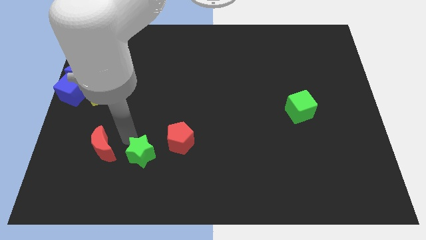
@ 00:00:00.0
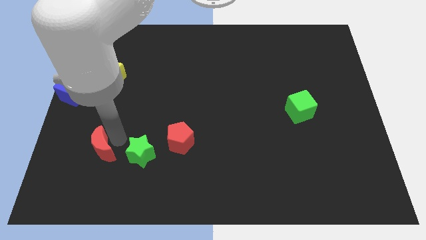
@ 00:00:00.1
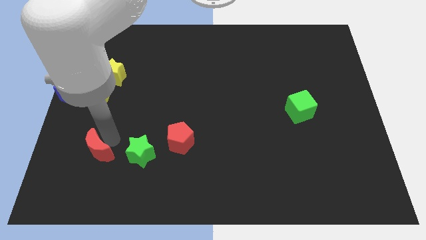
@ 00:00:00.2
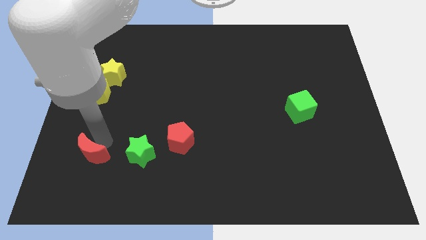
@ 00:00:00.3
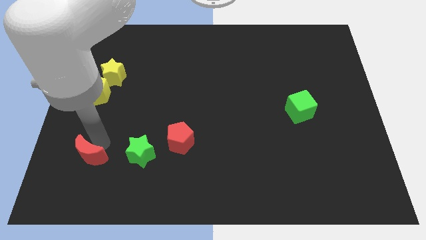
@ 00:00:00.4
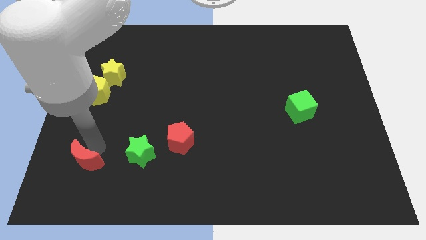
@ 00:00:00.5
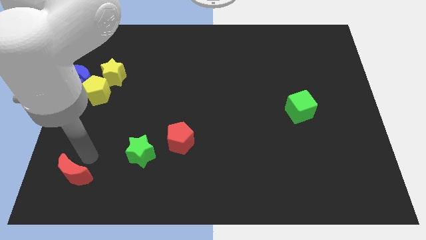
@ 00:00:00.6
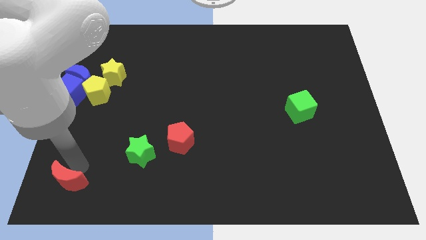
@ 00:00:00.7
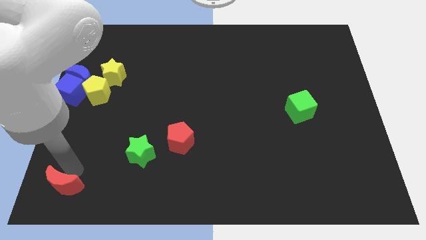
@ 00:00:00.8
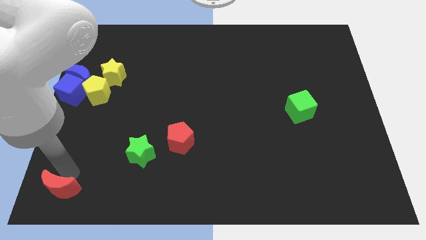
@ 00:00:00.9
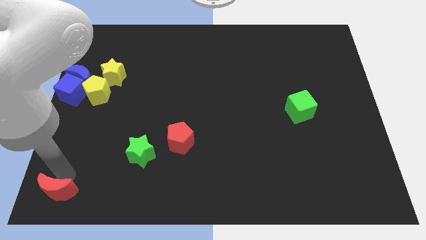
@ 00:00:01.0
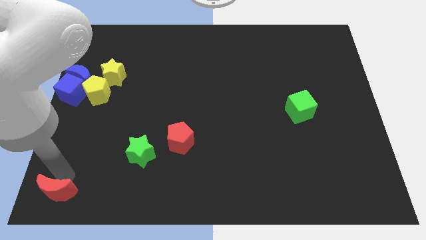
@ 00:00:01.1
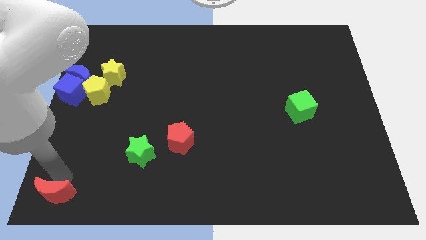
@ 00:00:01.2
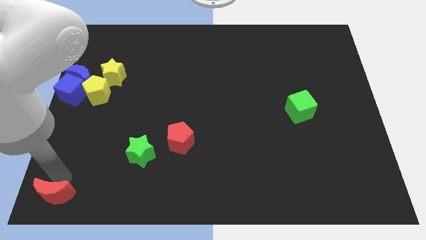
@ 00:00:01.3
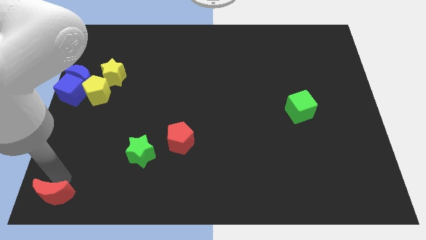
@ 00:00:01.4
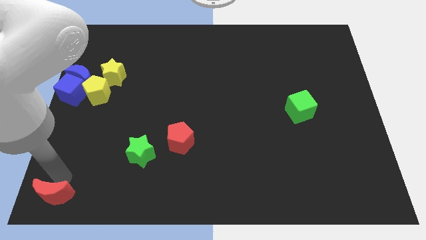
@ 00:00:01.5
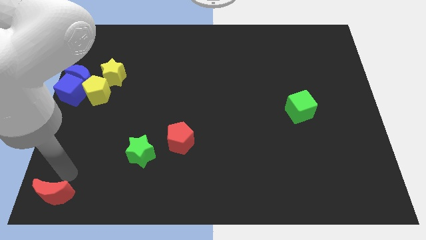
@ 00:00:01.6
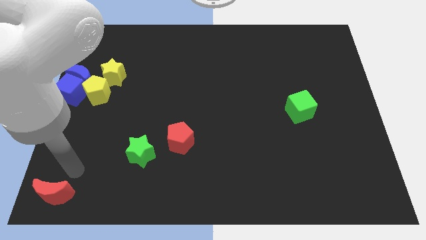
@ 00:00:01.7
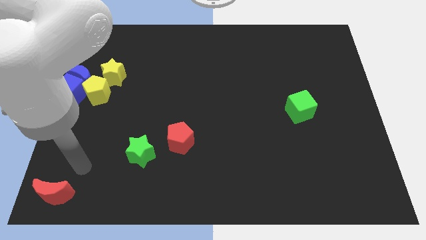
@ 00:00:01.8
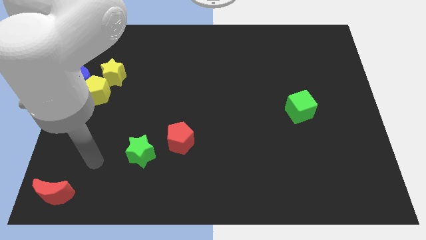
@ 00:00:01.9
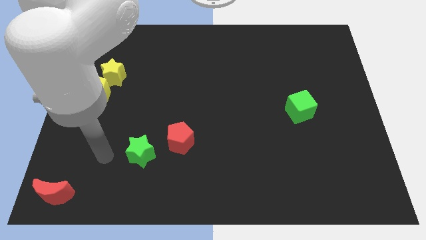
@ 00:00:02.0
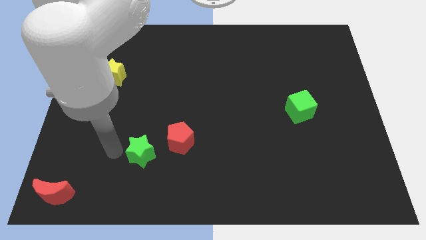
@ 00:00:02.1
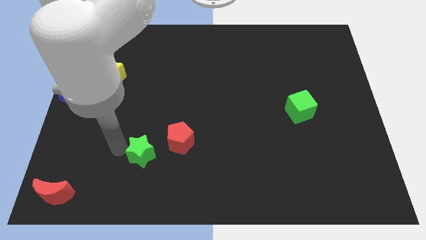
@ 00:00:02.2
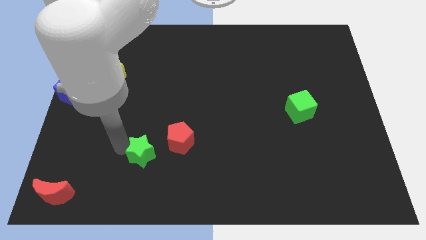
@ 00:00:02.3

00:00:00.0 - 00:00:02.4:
push the red moon to the bottom left corner

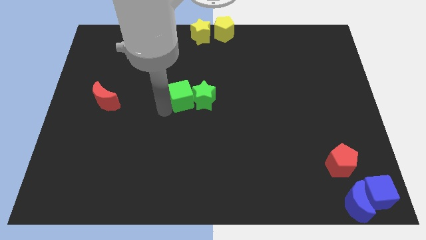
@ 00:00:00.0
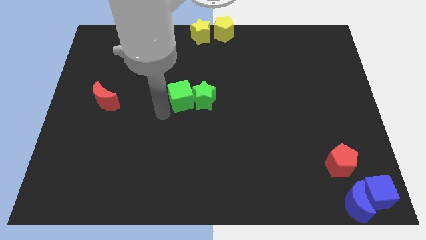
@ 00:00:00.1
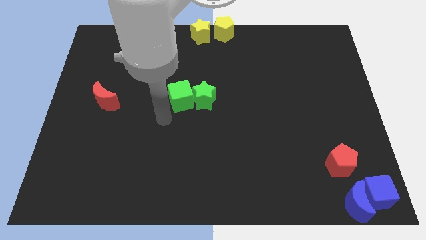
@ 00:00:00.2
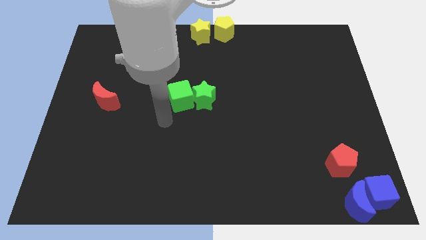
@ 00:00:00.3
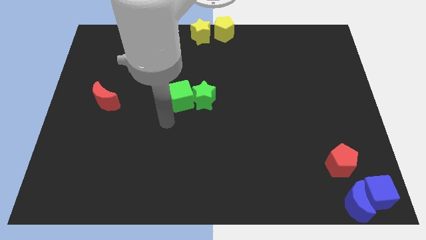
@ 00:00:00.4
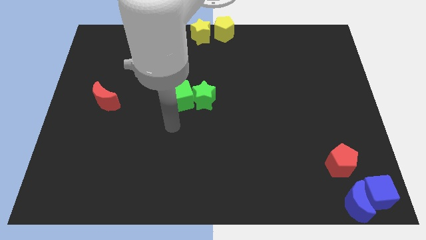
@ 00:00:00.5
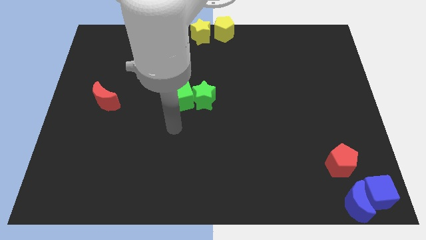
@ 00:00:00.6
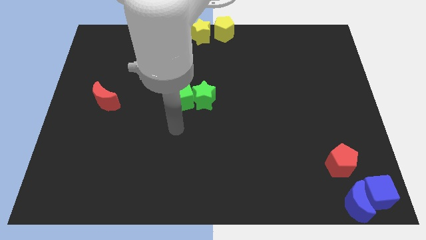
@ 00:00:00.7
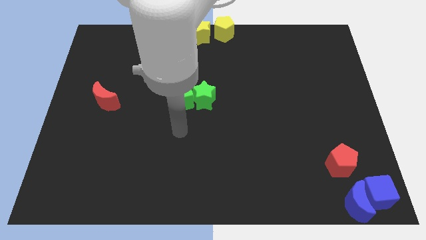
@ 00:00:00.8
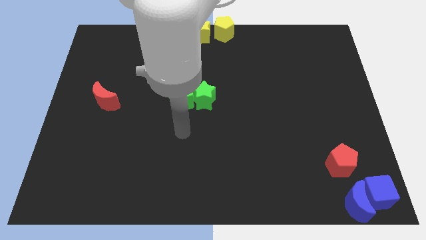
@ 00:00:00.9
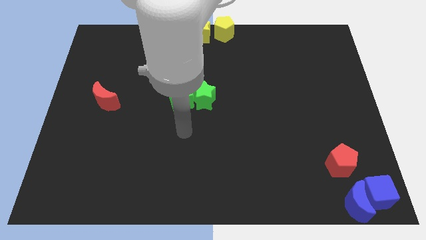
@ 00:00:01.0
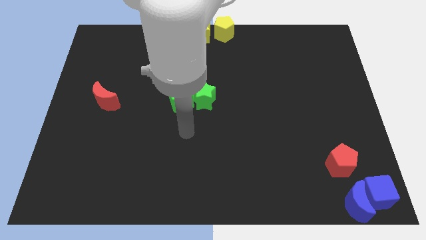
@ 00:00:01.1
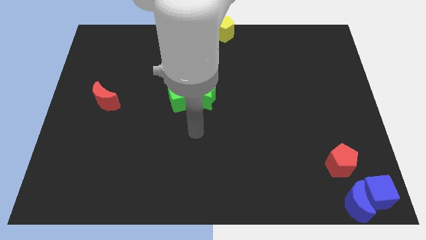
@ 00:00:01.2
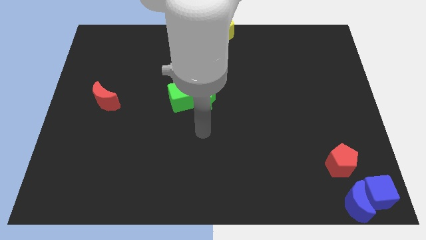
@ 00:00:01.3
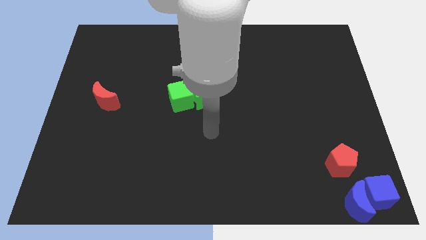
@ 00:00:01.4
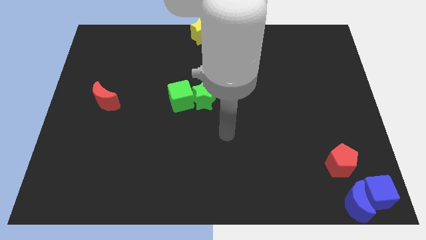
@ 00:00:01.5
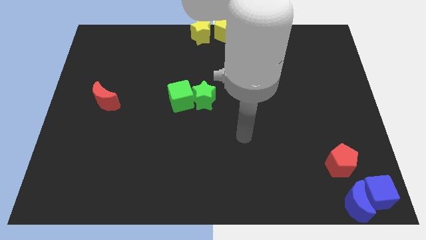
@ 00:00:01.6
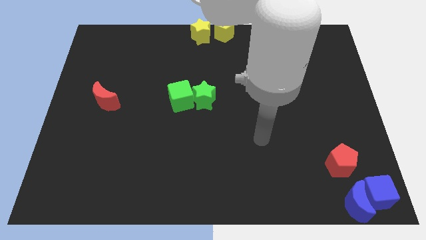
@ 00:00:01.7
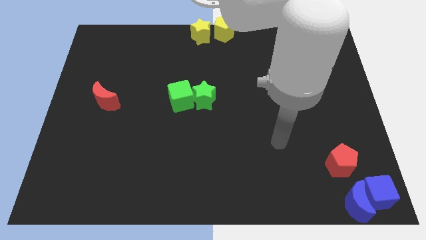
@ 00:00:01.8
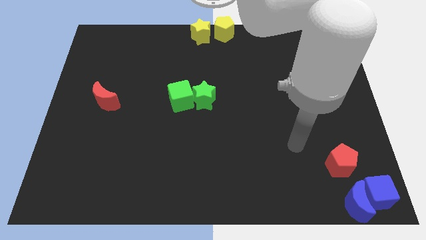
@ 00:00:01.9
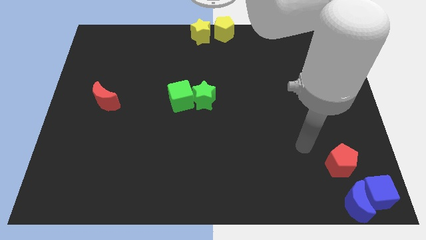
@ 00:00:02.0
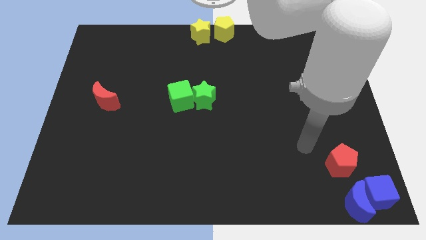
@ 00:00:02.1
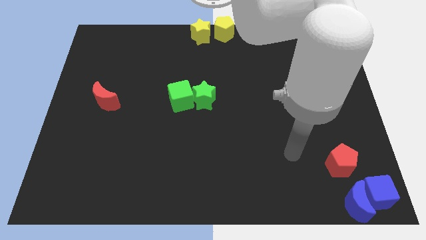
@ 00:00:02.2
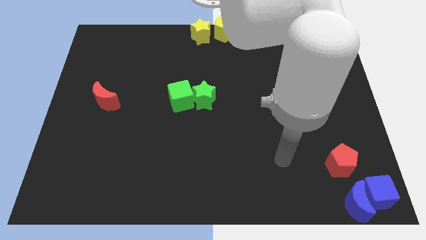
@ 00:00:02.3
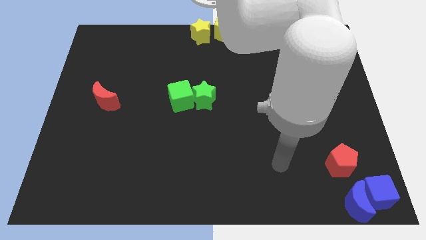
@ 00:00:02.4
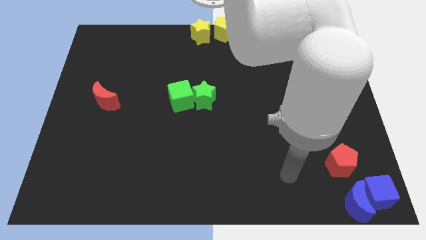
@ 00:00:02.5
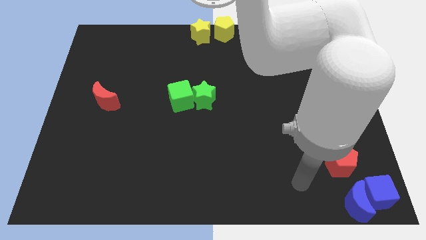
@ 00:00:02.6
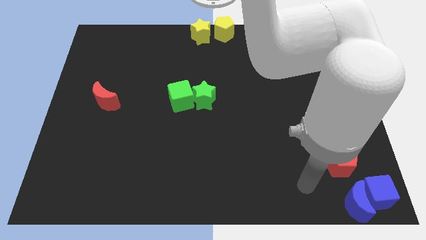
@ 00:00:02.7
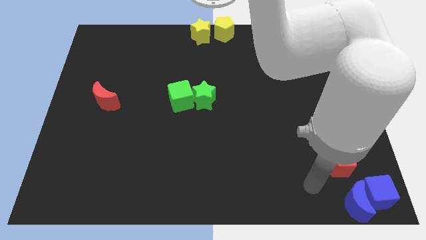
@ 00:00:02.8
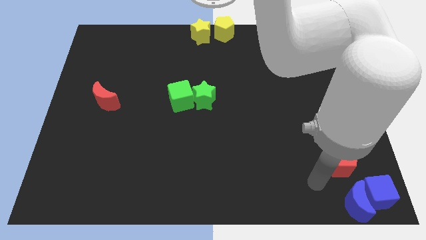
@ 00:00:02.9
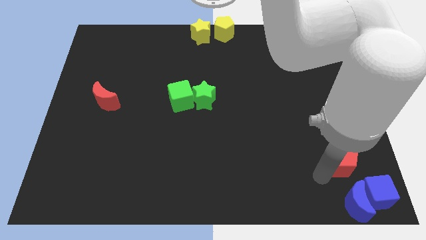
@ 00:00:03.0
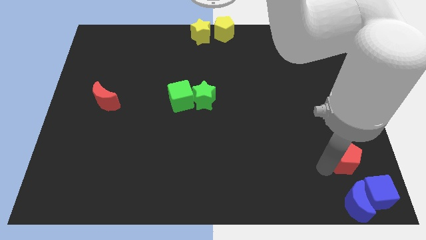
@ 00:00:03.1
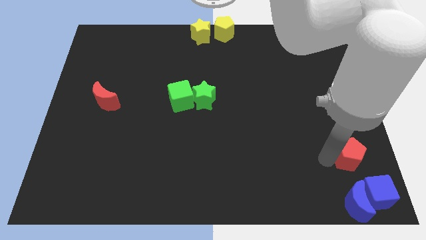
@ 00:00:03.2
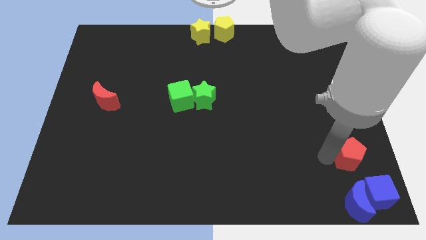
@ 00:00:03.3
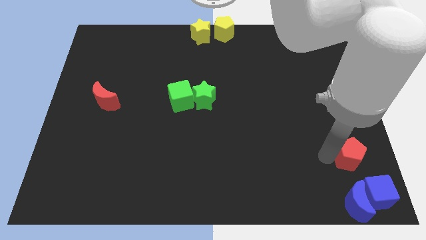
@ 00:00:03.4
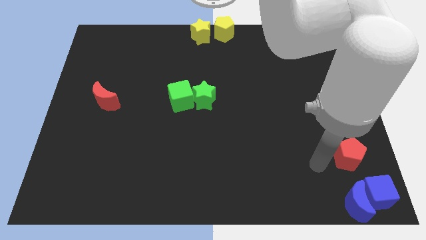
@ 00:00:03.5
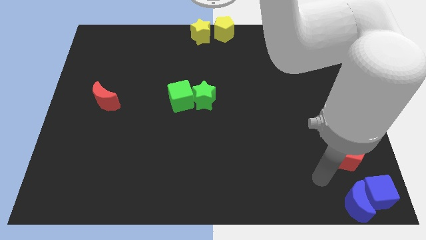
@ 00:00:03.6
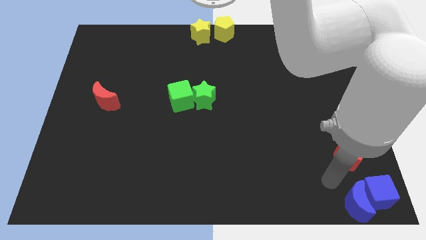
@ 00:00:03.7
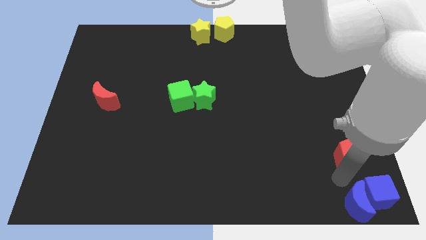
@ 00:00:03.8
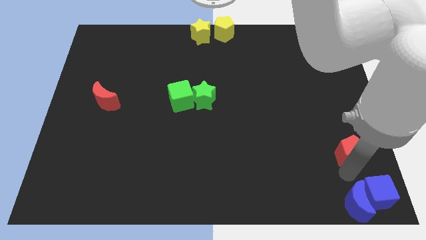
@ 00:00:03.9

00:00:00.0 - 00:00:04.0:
slightly push the red pentagon towards the right side

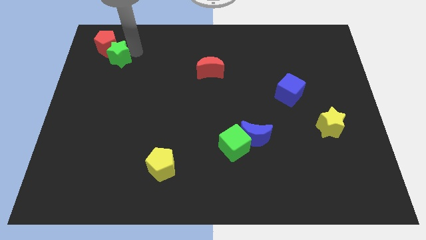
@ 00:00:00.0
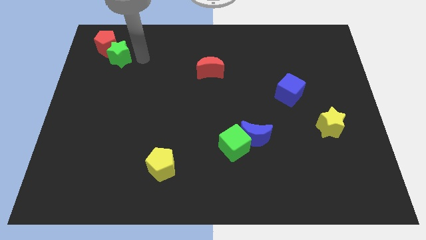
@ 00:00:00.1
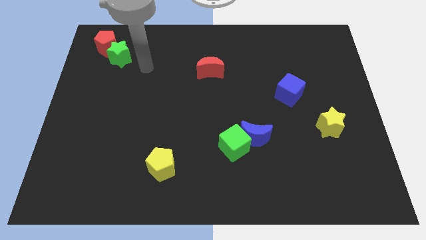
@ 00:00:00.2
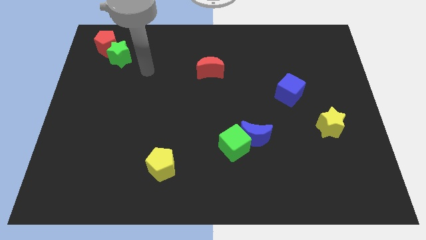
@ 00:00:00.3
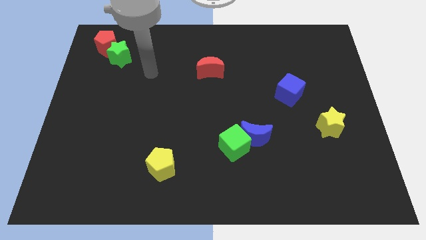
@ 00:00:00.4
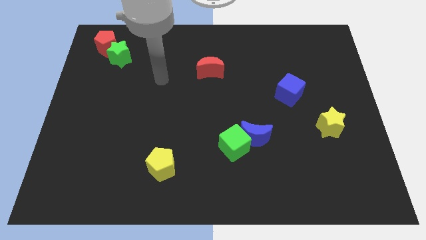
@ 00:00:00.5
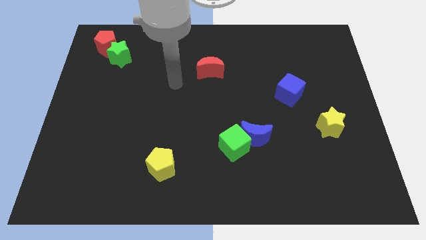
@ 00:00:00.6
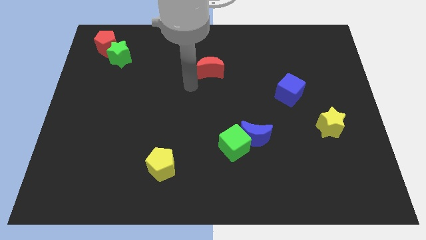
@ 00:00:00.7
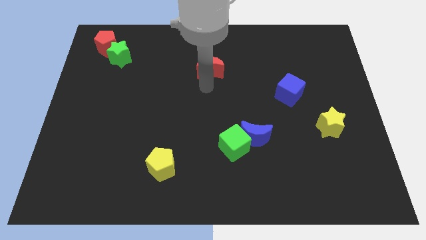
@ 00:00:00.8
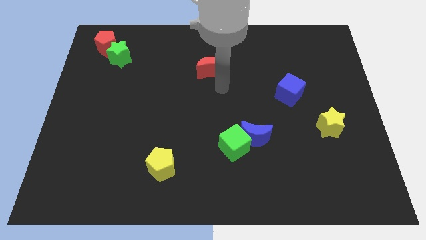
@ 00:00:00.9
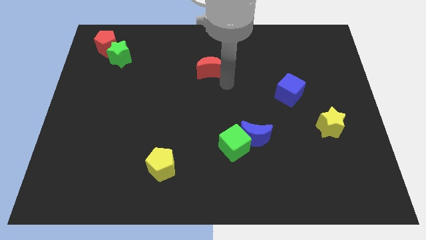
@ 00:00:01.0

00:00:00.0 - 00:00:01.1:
move your arm towards the red crescent

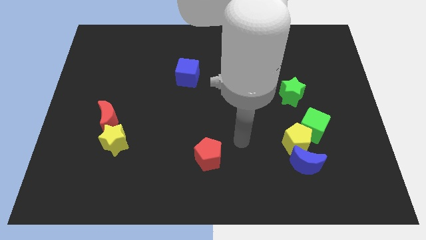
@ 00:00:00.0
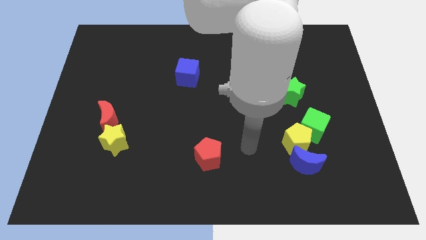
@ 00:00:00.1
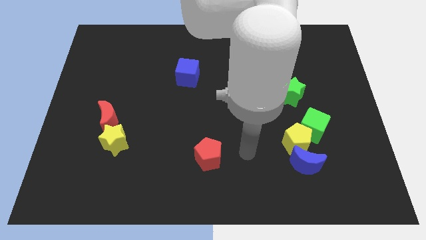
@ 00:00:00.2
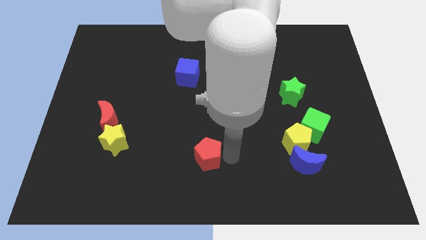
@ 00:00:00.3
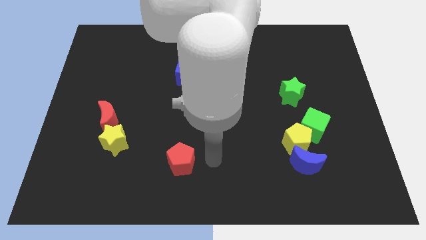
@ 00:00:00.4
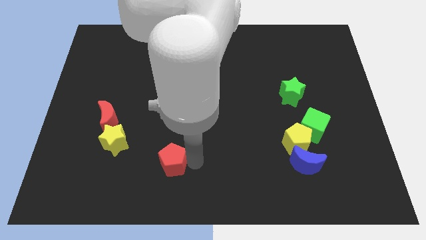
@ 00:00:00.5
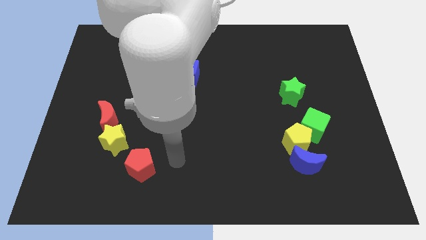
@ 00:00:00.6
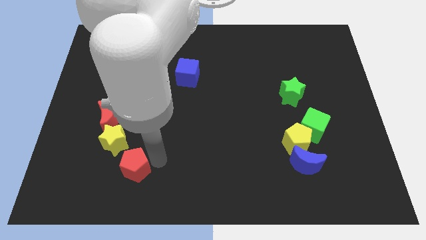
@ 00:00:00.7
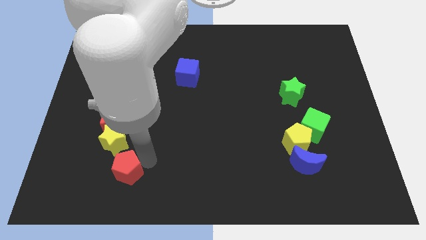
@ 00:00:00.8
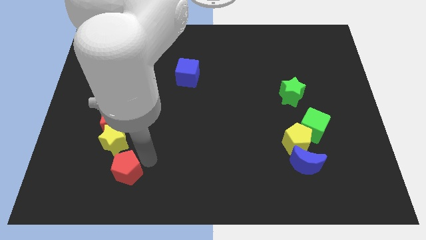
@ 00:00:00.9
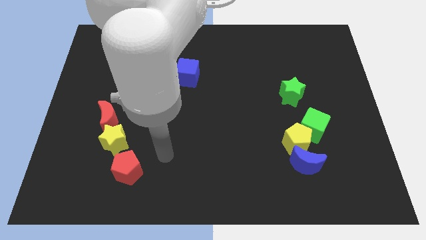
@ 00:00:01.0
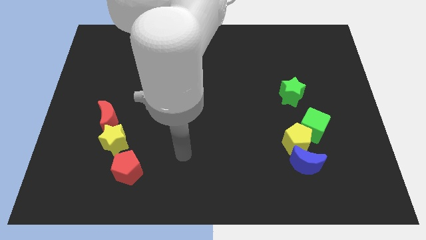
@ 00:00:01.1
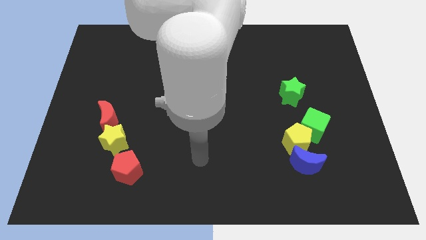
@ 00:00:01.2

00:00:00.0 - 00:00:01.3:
place the red pentagon bottom right to the yellow star
